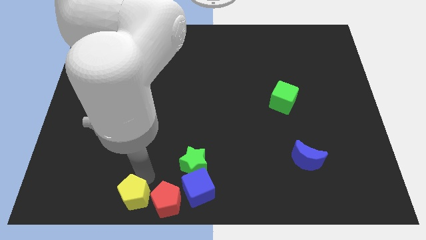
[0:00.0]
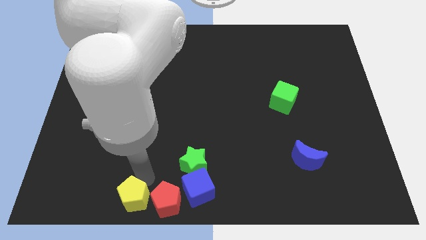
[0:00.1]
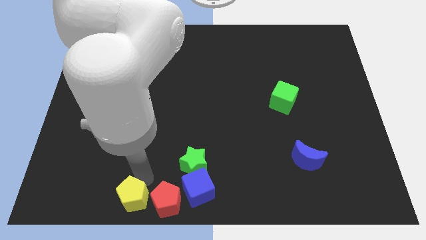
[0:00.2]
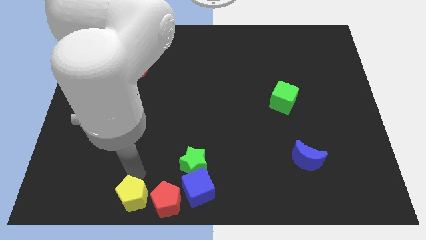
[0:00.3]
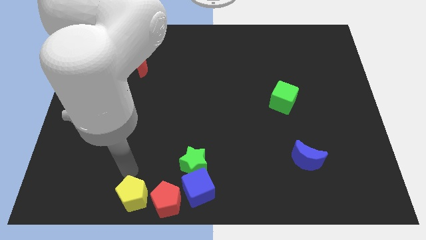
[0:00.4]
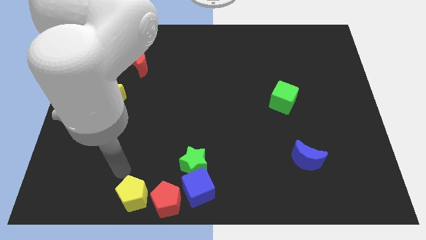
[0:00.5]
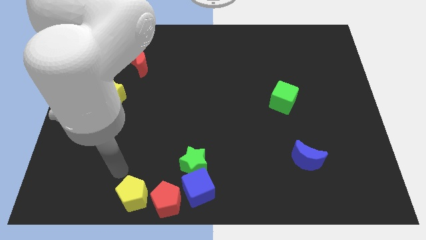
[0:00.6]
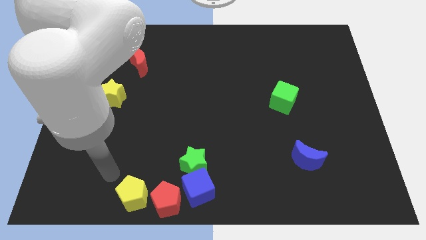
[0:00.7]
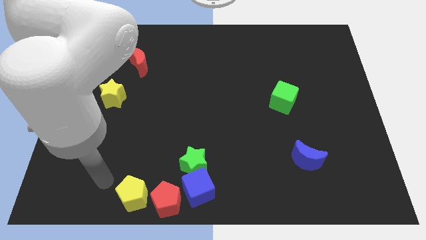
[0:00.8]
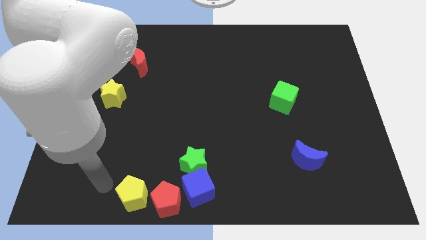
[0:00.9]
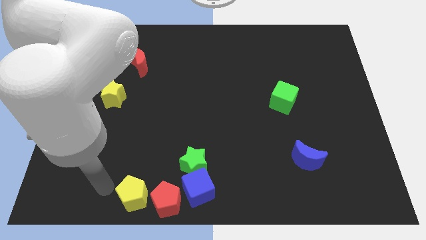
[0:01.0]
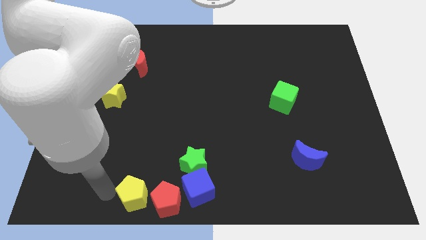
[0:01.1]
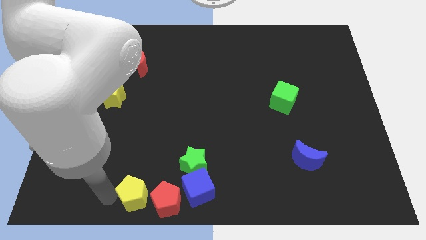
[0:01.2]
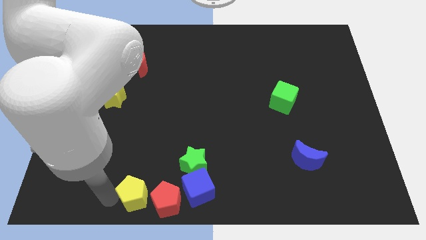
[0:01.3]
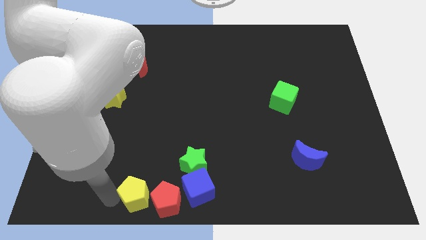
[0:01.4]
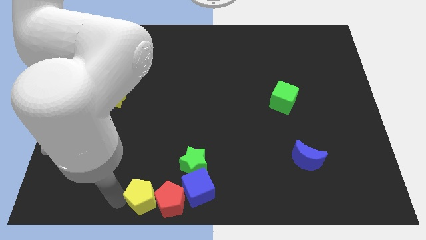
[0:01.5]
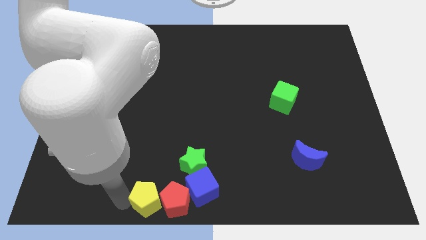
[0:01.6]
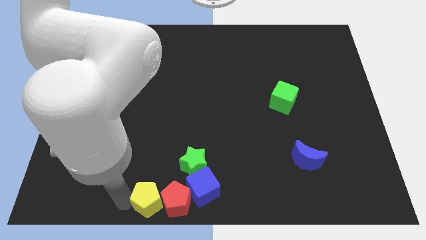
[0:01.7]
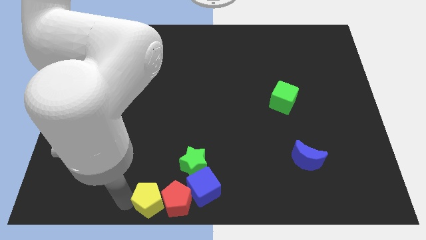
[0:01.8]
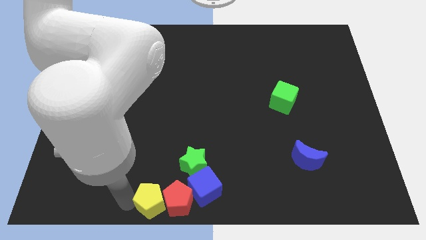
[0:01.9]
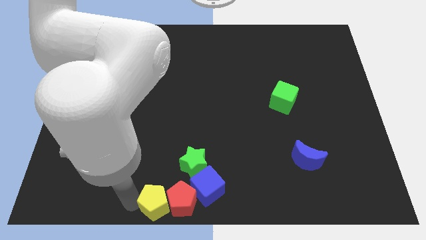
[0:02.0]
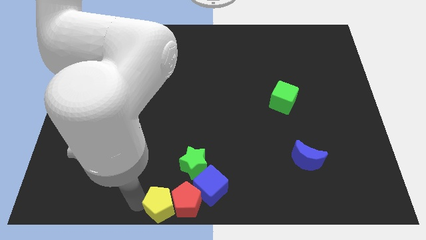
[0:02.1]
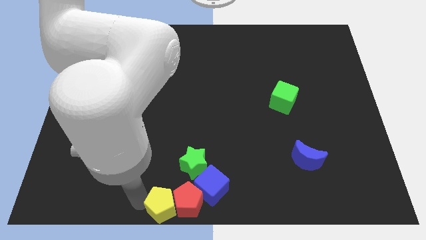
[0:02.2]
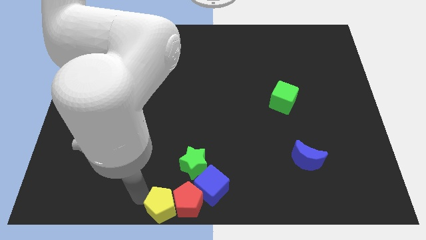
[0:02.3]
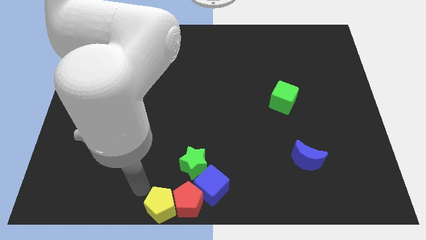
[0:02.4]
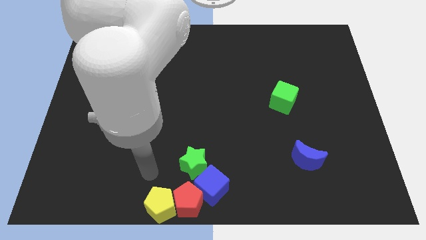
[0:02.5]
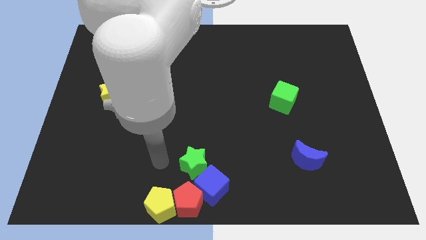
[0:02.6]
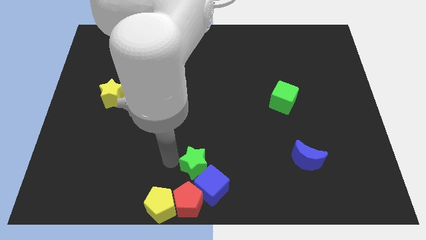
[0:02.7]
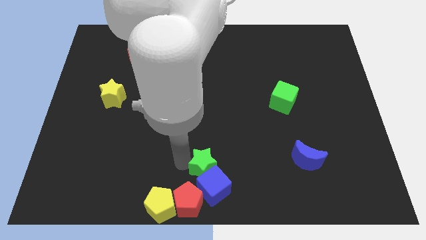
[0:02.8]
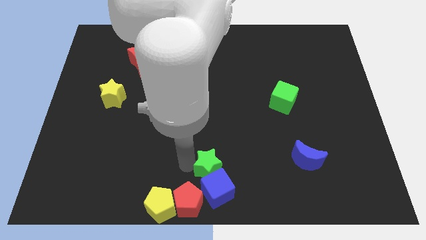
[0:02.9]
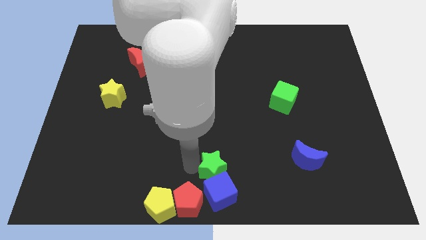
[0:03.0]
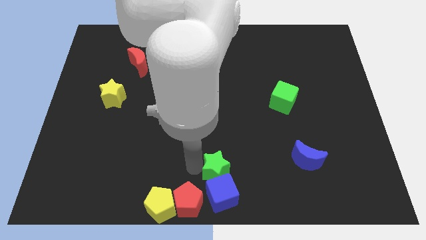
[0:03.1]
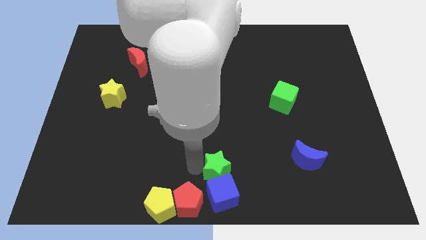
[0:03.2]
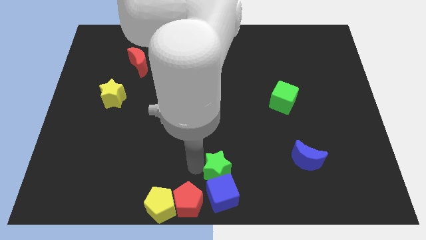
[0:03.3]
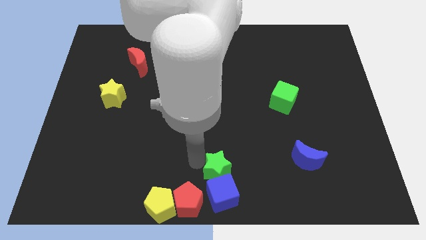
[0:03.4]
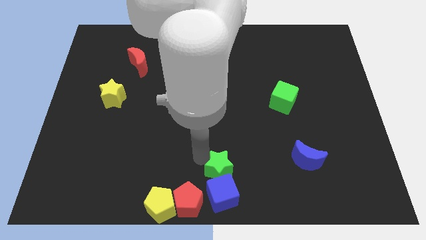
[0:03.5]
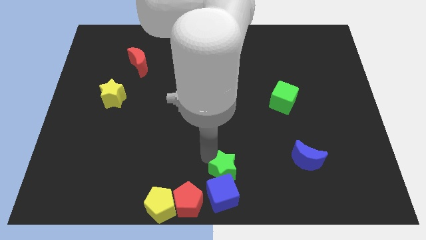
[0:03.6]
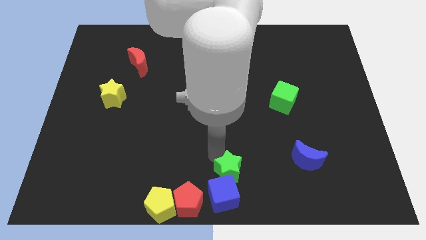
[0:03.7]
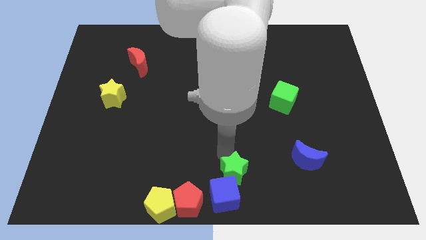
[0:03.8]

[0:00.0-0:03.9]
line up yellow pentagonred pentagon and bue cube at bottom center of the board

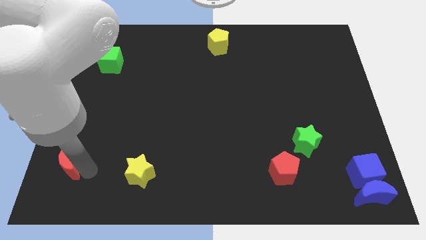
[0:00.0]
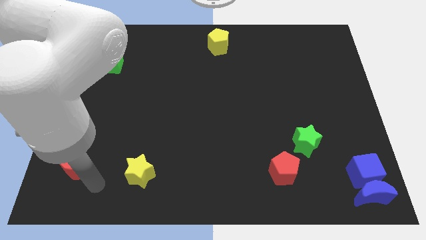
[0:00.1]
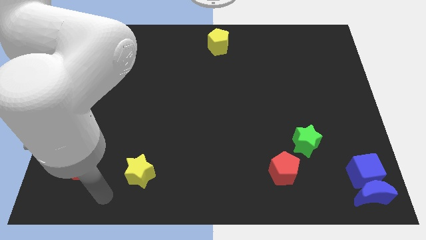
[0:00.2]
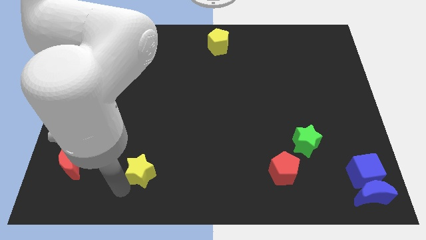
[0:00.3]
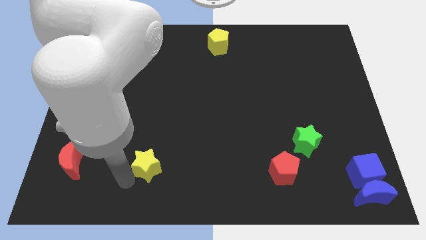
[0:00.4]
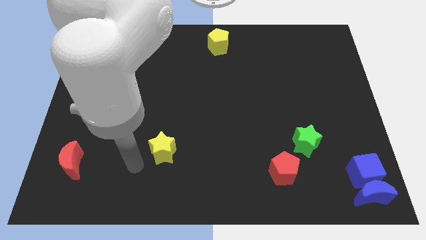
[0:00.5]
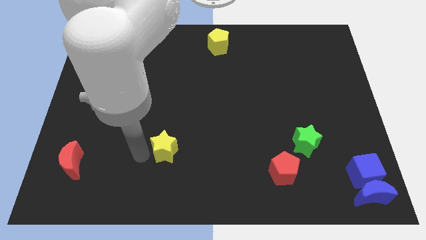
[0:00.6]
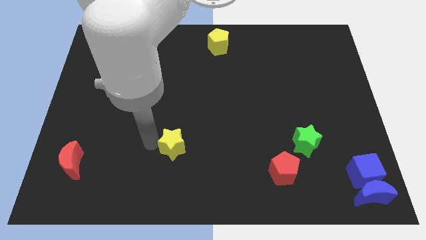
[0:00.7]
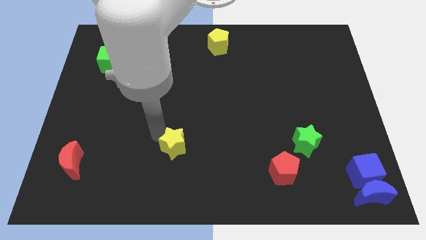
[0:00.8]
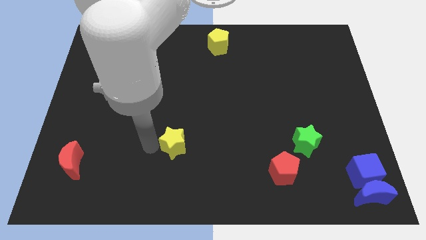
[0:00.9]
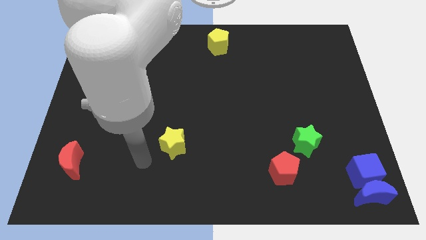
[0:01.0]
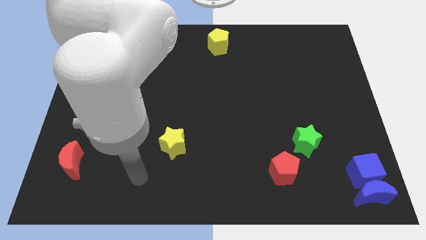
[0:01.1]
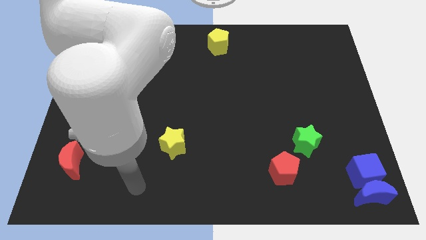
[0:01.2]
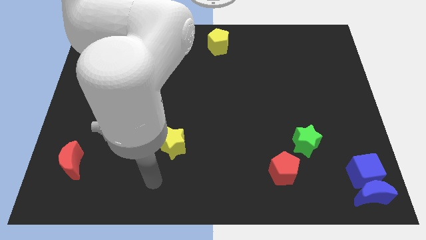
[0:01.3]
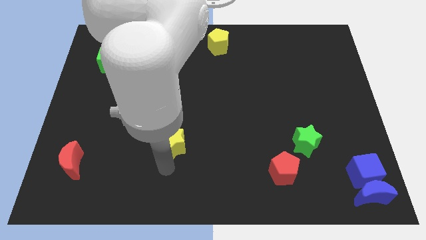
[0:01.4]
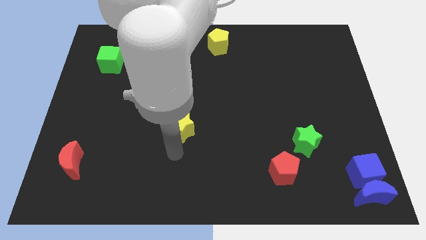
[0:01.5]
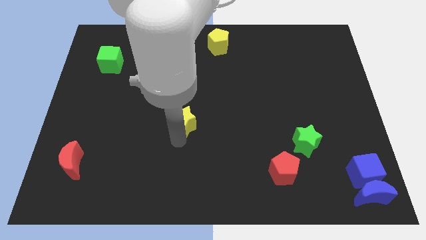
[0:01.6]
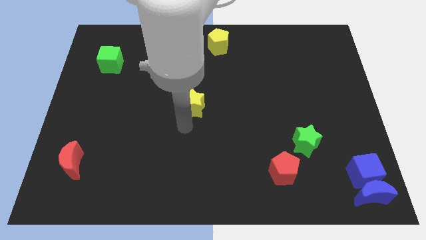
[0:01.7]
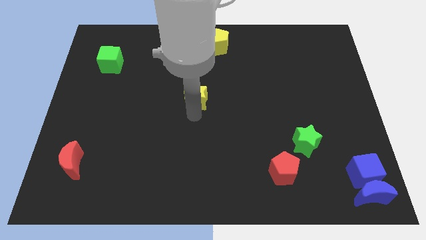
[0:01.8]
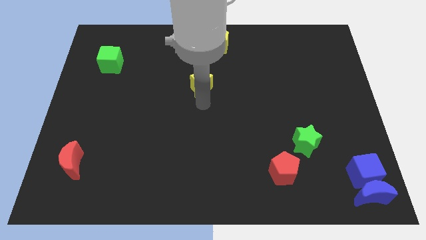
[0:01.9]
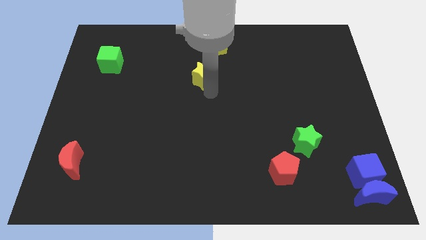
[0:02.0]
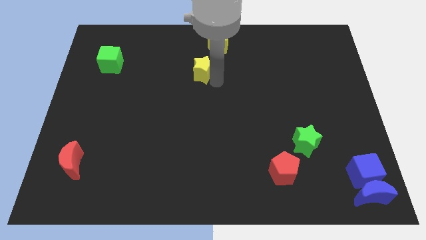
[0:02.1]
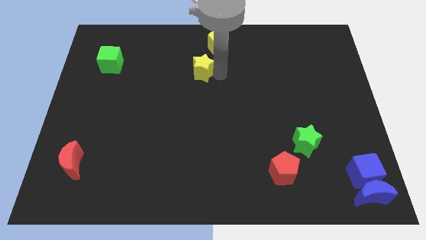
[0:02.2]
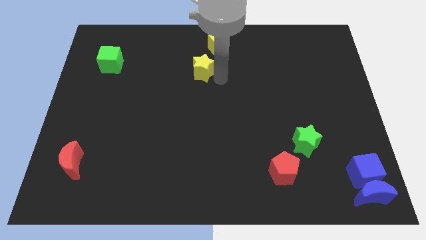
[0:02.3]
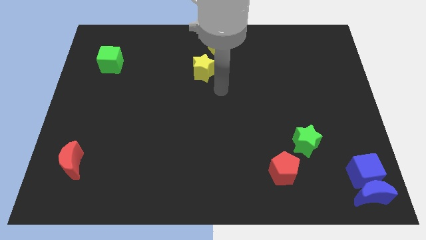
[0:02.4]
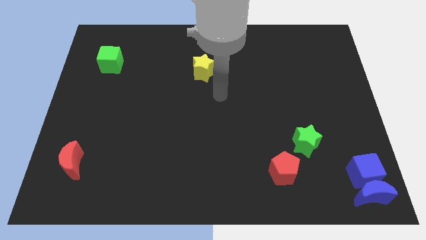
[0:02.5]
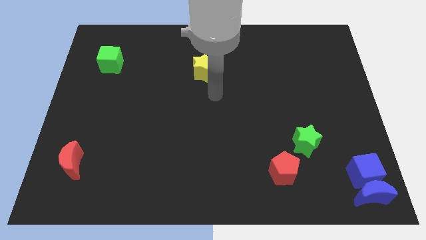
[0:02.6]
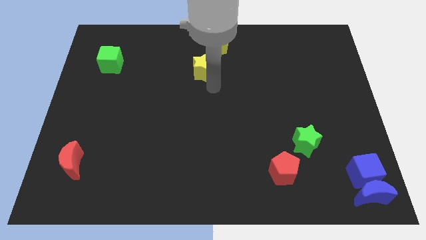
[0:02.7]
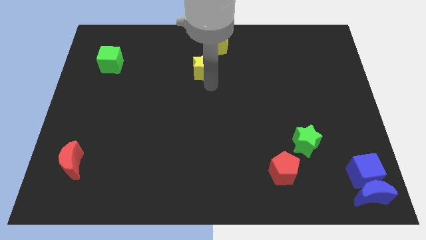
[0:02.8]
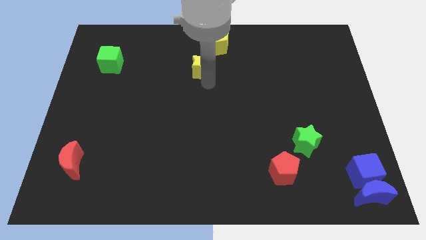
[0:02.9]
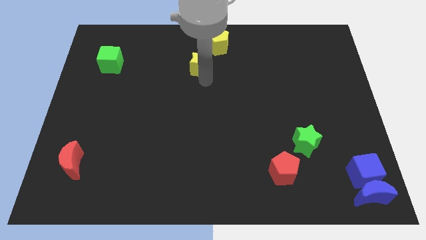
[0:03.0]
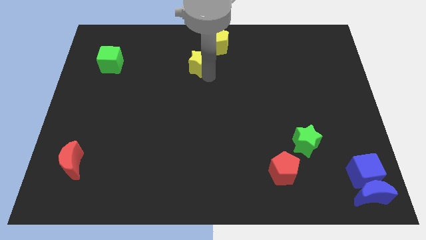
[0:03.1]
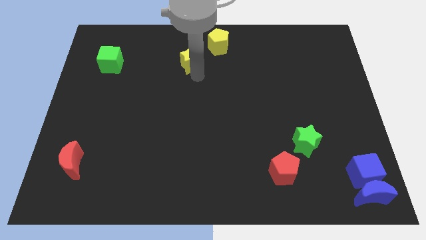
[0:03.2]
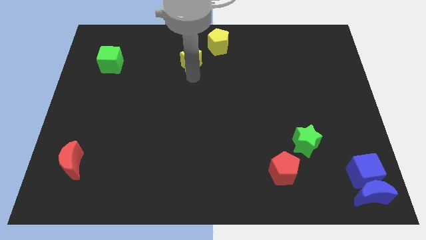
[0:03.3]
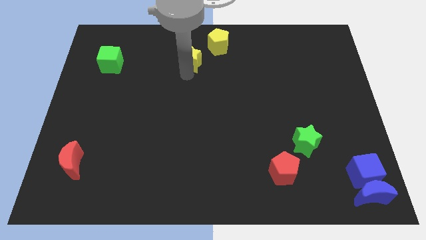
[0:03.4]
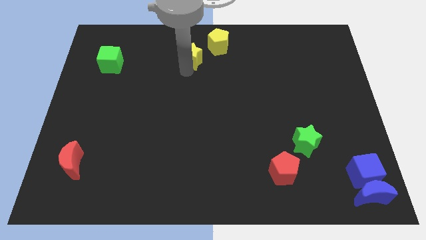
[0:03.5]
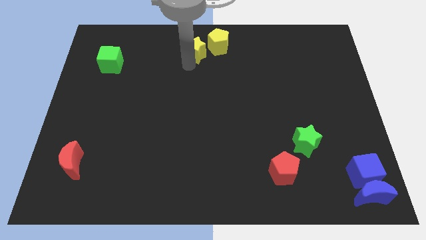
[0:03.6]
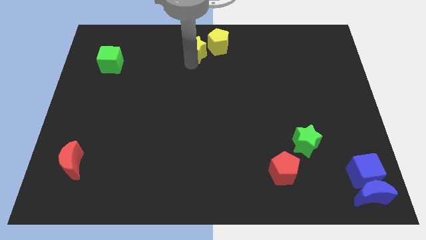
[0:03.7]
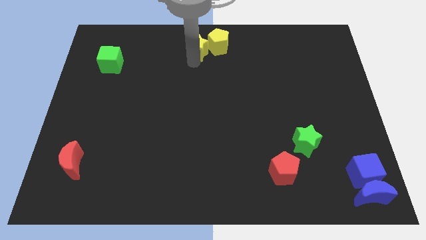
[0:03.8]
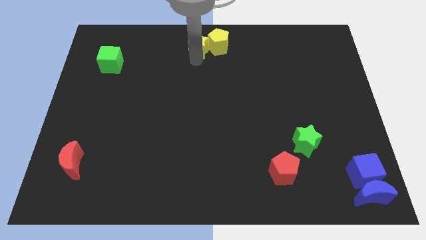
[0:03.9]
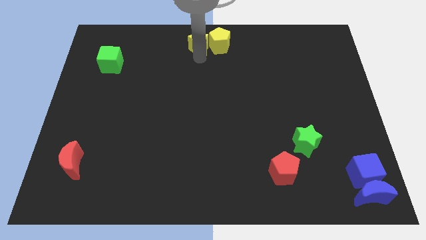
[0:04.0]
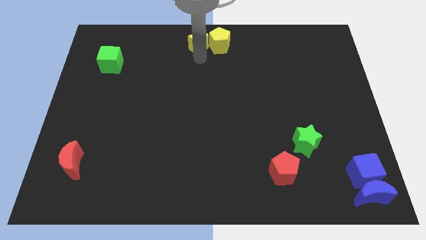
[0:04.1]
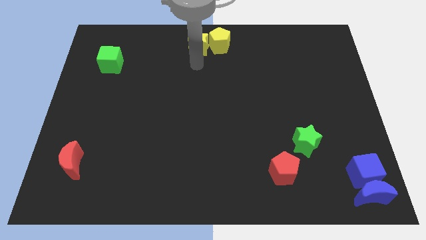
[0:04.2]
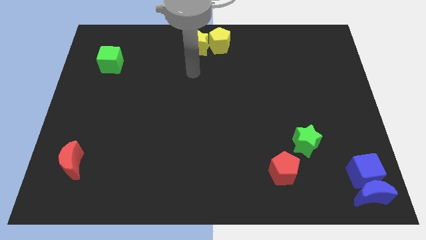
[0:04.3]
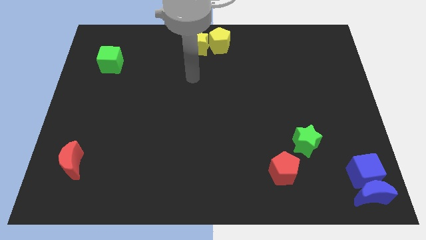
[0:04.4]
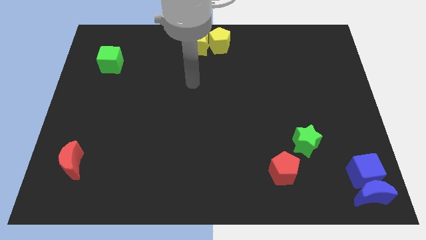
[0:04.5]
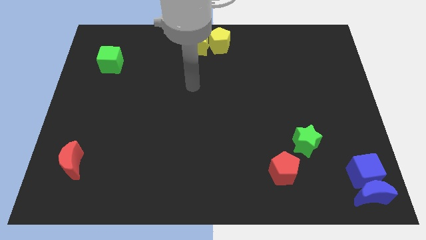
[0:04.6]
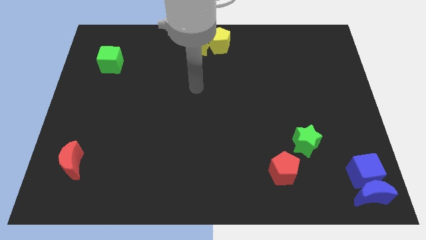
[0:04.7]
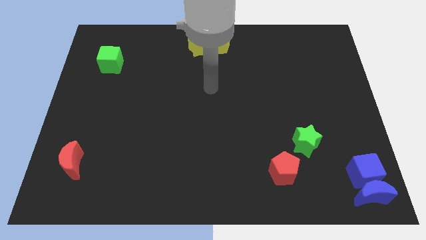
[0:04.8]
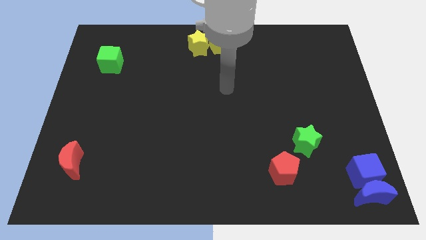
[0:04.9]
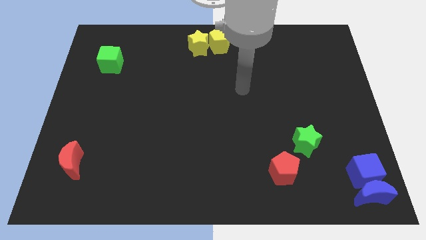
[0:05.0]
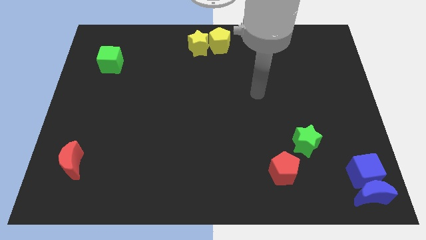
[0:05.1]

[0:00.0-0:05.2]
move yellow star into the left of the yellow pentagon
